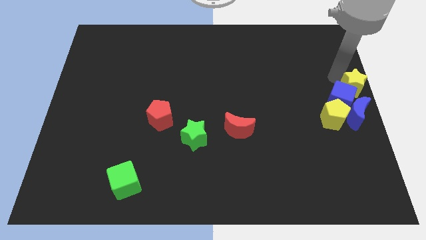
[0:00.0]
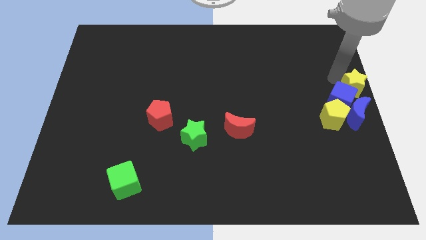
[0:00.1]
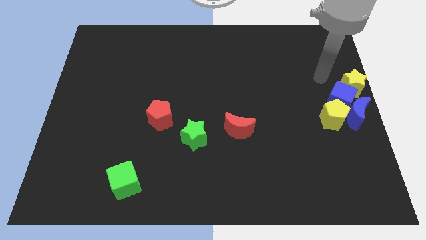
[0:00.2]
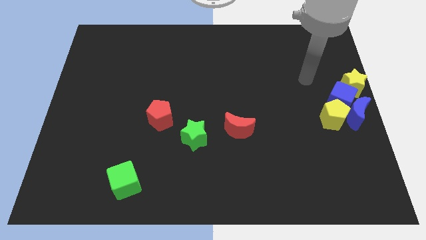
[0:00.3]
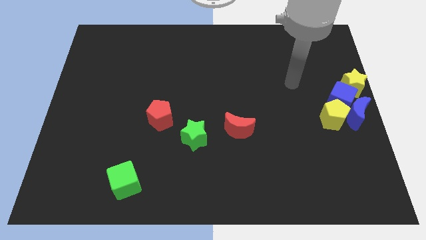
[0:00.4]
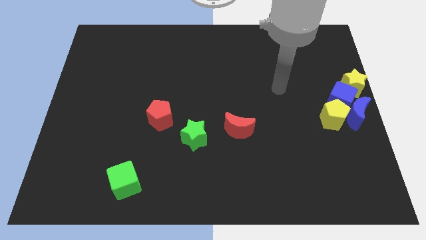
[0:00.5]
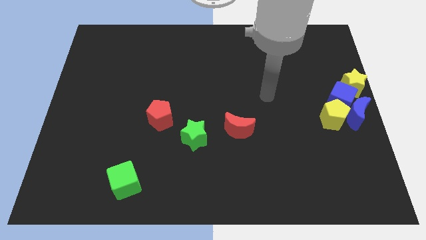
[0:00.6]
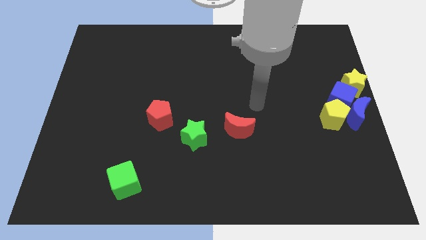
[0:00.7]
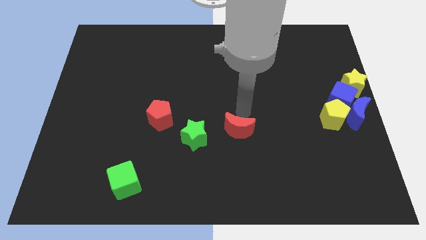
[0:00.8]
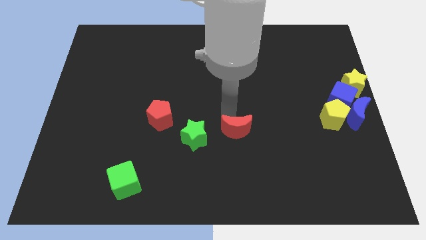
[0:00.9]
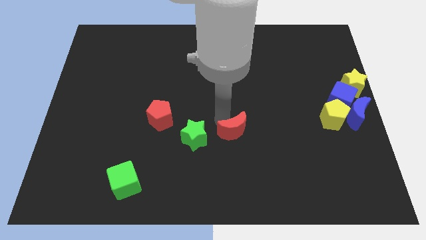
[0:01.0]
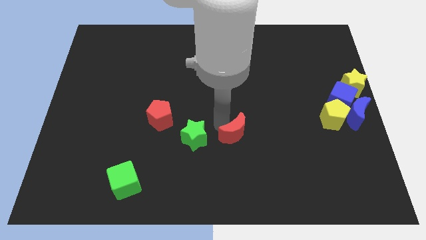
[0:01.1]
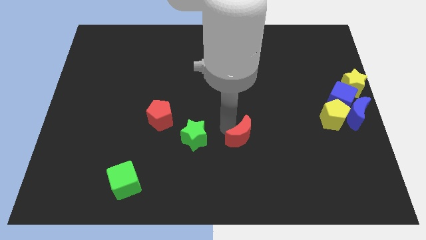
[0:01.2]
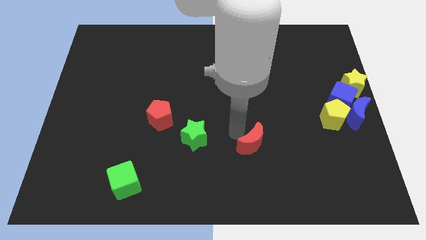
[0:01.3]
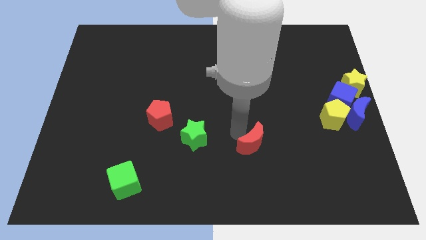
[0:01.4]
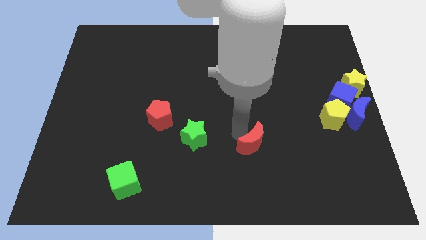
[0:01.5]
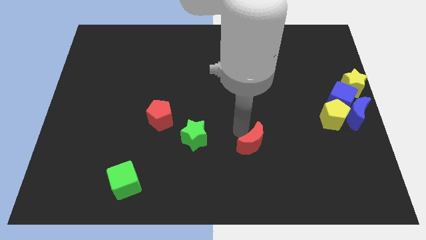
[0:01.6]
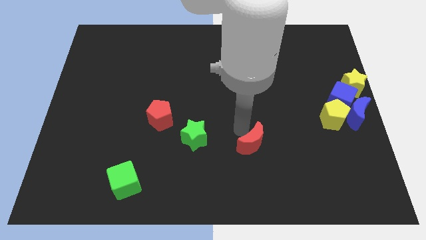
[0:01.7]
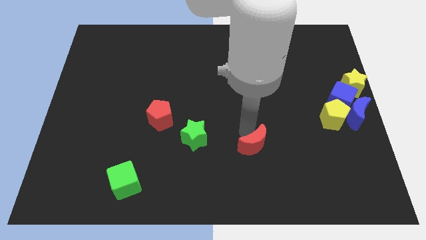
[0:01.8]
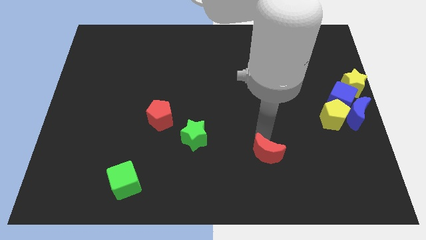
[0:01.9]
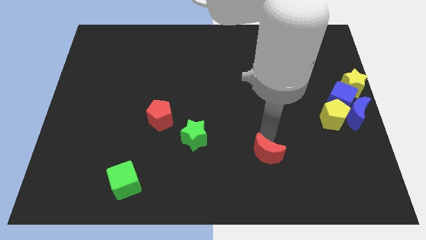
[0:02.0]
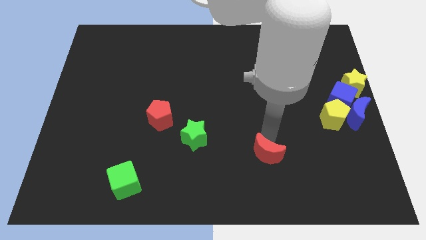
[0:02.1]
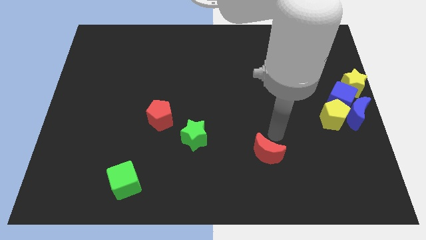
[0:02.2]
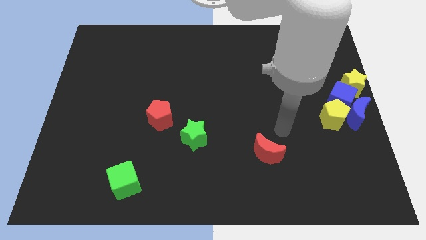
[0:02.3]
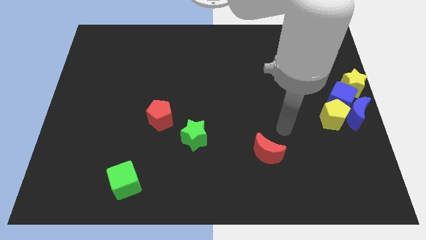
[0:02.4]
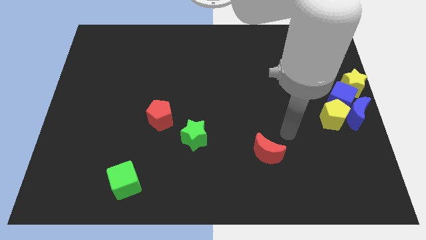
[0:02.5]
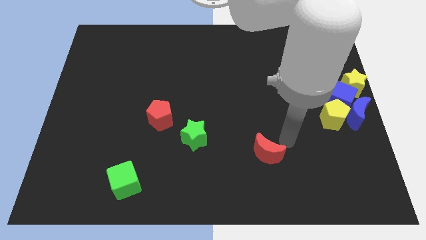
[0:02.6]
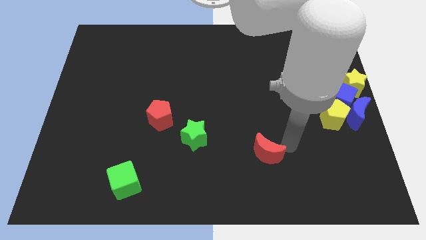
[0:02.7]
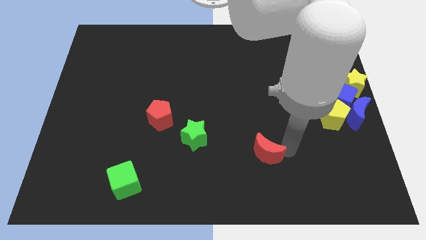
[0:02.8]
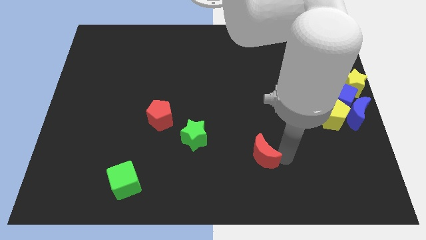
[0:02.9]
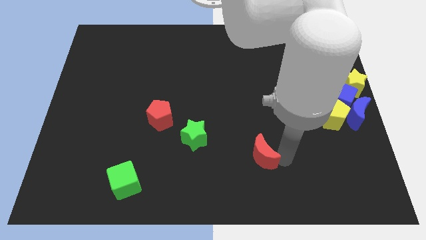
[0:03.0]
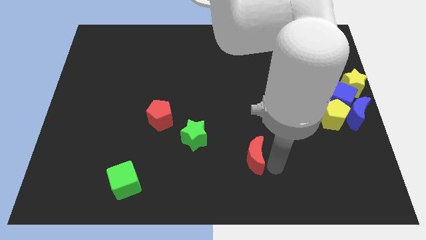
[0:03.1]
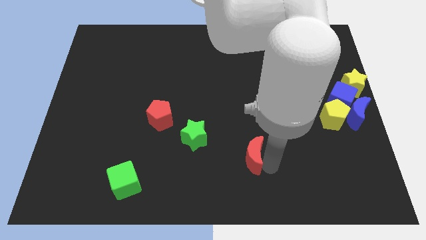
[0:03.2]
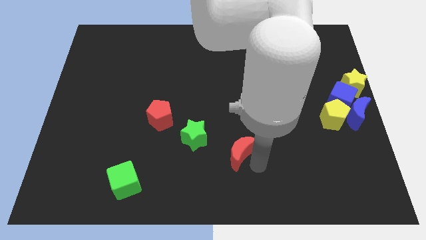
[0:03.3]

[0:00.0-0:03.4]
point your arm right to red moon

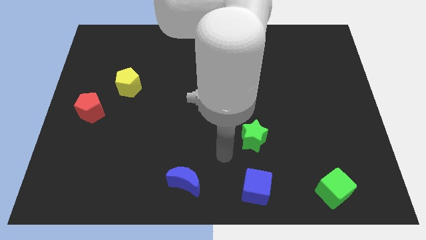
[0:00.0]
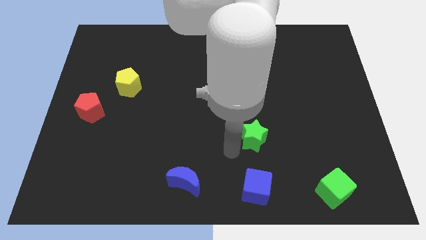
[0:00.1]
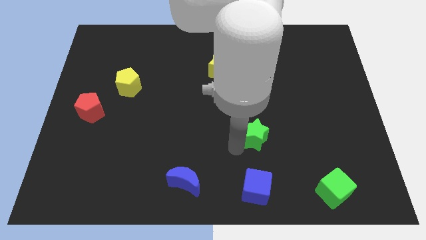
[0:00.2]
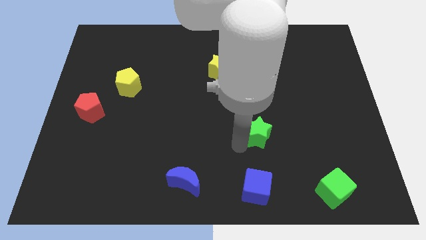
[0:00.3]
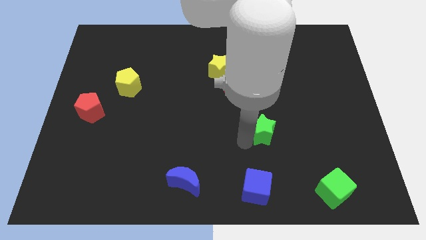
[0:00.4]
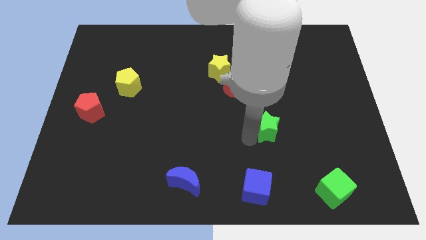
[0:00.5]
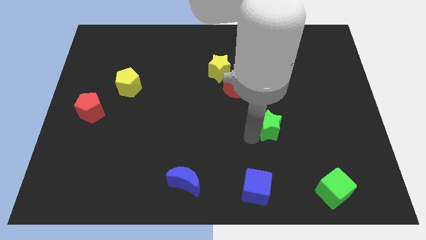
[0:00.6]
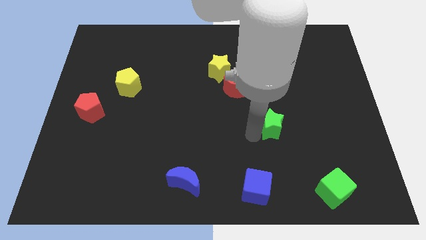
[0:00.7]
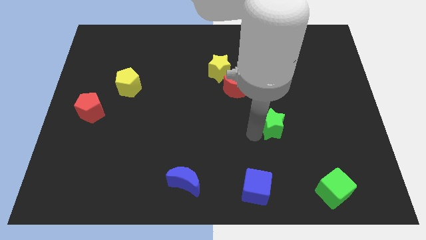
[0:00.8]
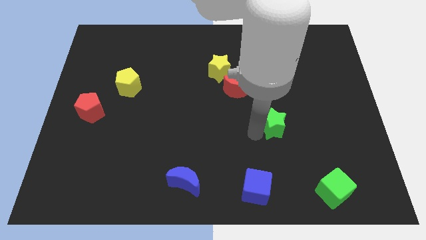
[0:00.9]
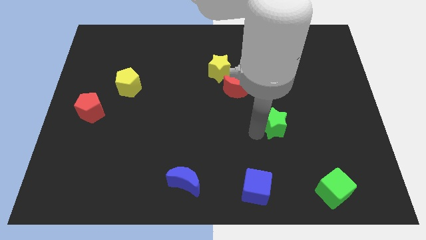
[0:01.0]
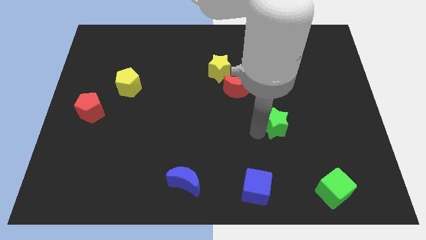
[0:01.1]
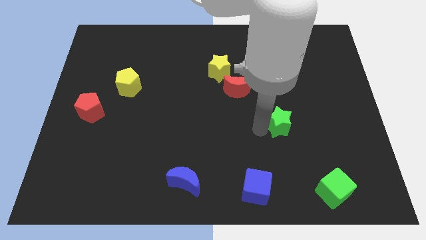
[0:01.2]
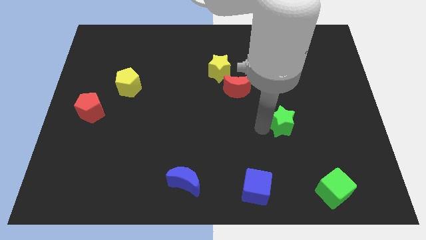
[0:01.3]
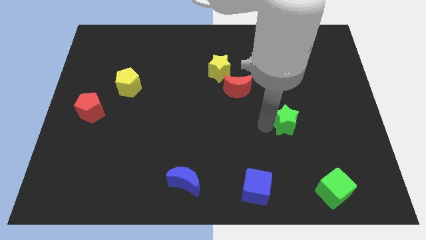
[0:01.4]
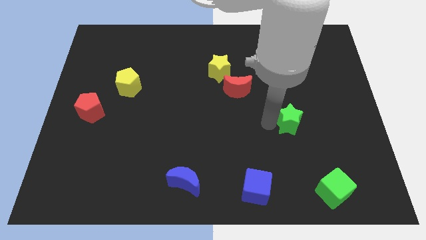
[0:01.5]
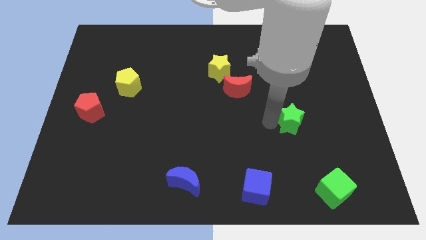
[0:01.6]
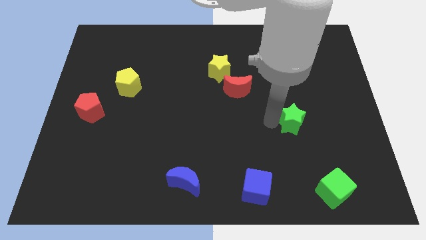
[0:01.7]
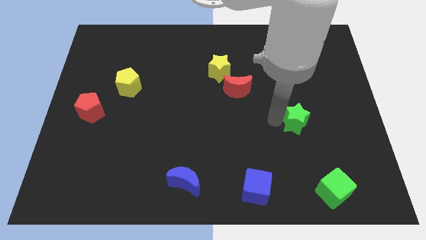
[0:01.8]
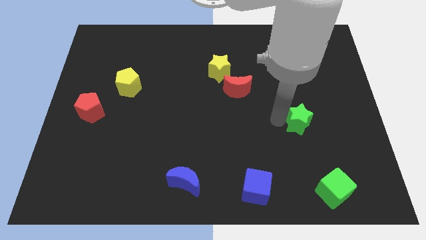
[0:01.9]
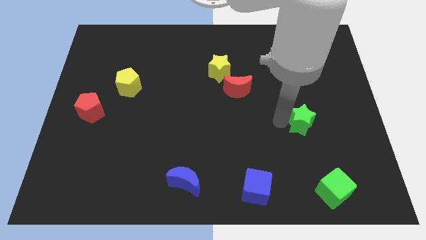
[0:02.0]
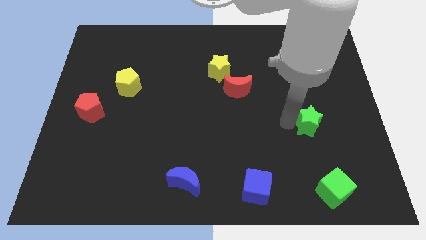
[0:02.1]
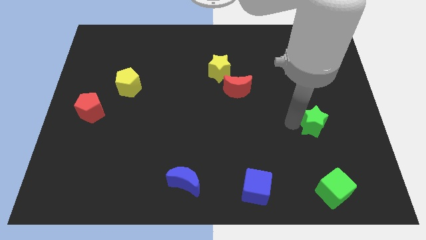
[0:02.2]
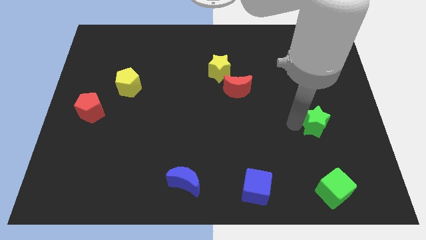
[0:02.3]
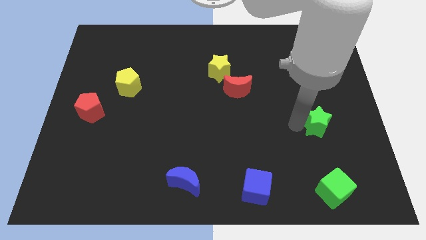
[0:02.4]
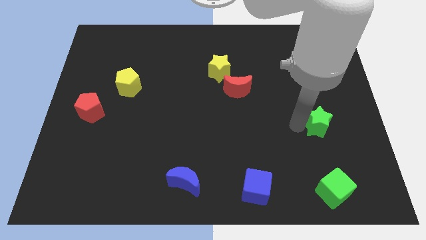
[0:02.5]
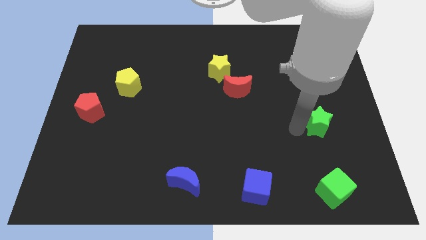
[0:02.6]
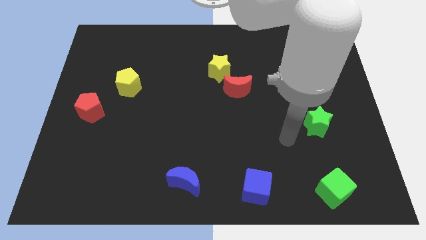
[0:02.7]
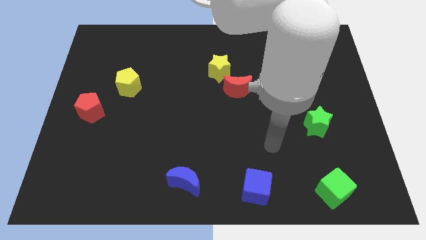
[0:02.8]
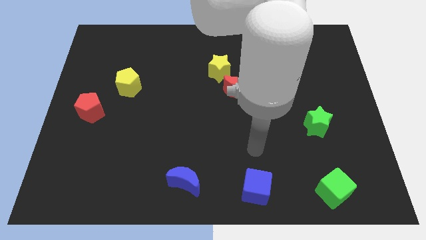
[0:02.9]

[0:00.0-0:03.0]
move the green star vertical to the green cube

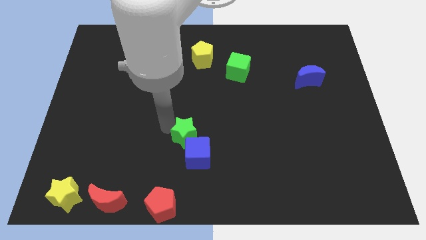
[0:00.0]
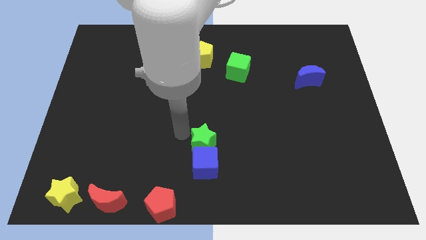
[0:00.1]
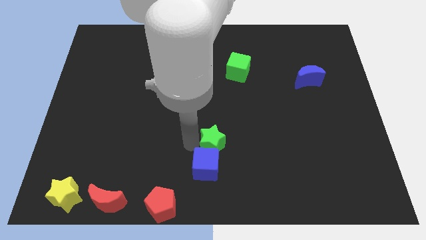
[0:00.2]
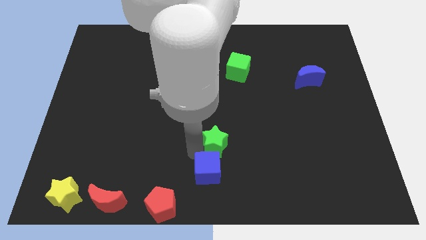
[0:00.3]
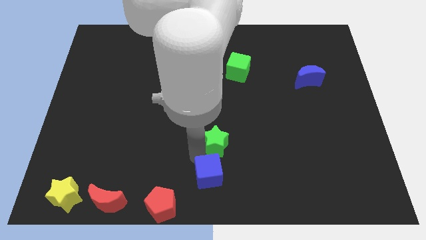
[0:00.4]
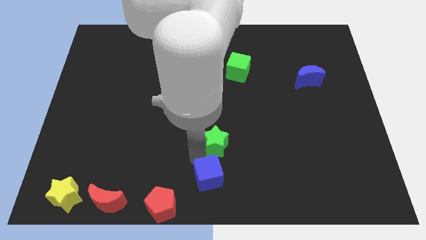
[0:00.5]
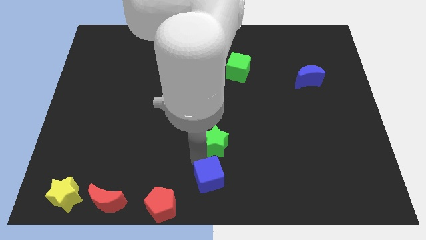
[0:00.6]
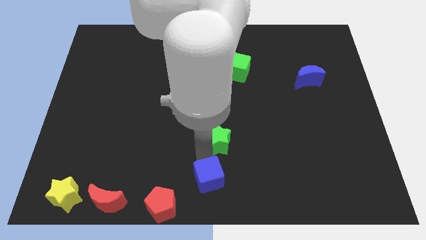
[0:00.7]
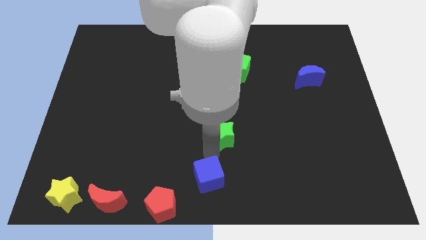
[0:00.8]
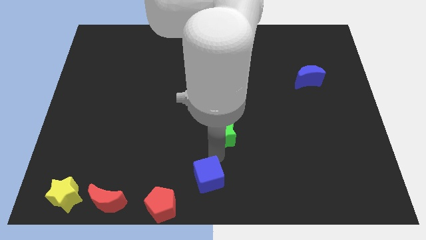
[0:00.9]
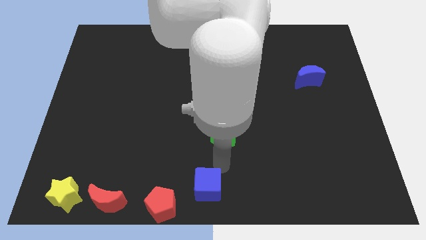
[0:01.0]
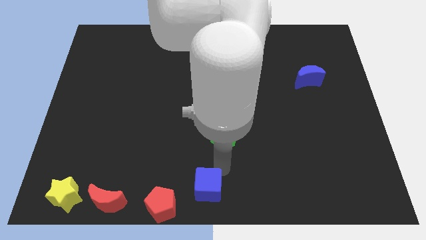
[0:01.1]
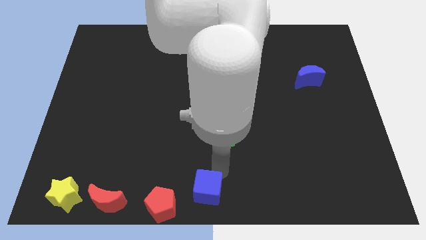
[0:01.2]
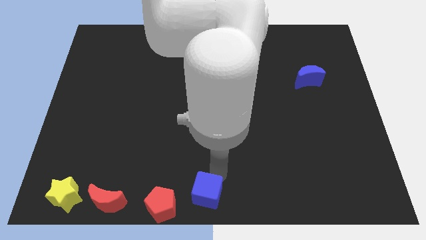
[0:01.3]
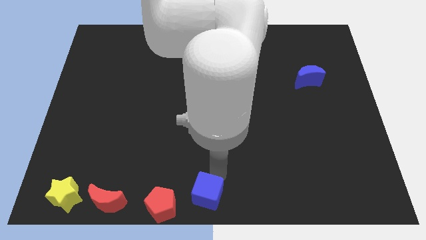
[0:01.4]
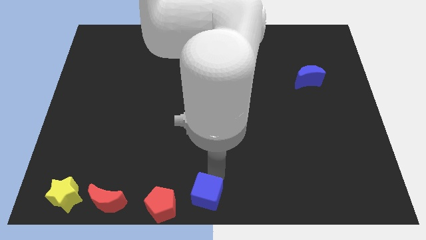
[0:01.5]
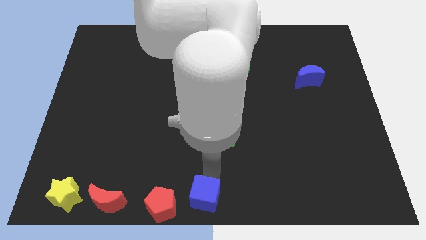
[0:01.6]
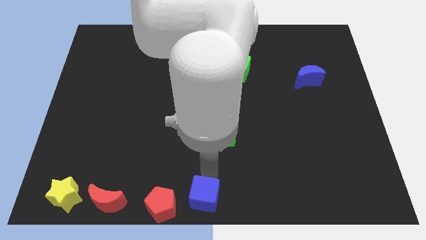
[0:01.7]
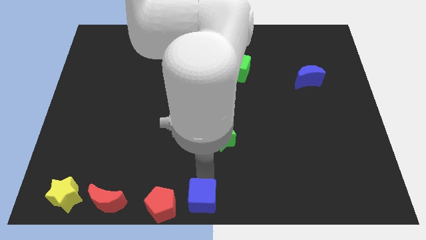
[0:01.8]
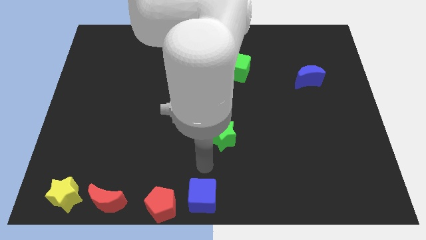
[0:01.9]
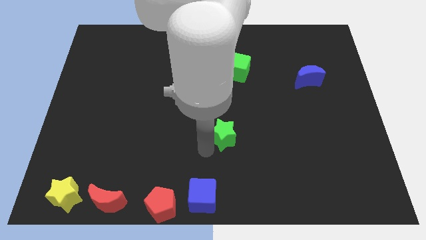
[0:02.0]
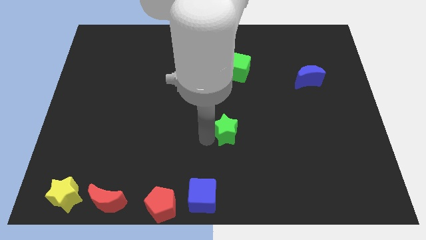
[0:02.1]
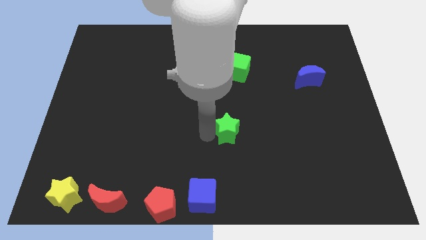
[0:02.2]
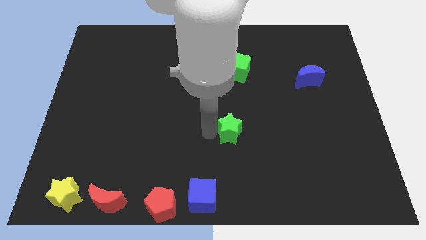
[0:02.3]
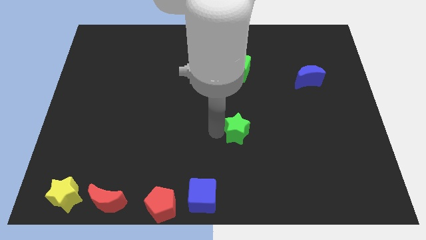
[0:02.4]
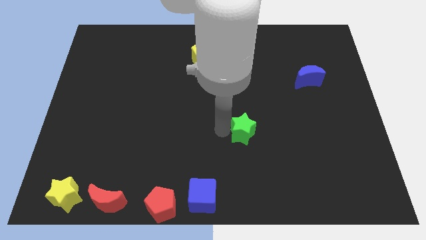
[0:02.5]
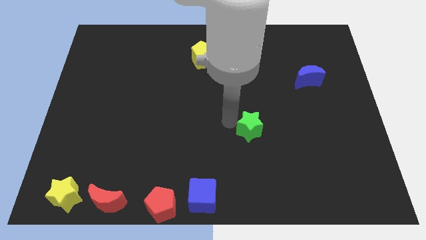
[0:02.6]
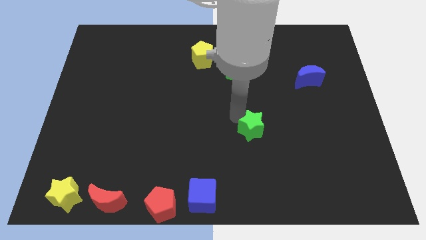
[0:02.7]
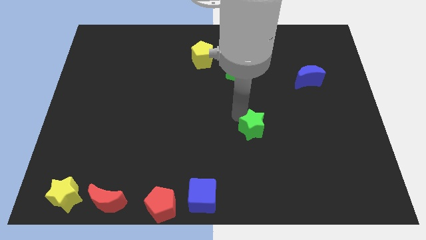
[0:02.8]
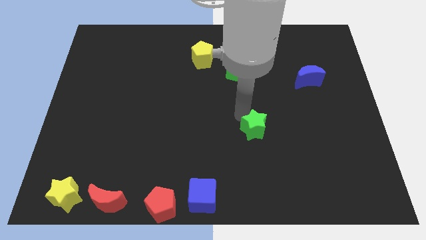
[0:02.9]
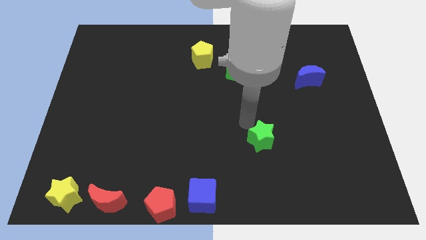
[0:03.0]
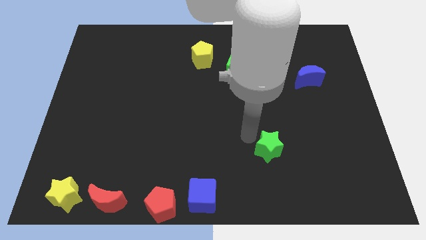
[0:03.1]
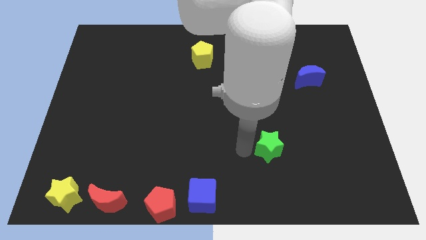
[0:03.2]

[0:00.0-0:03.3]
place the blue cube to the right of the red pentagon
